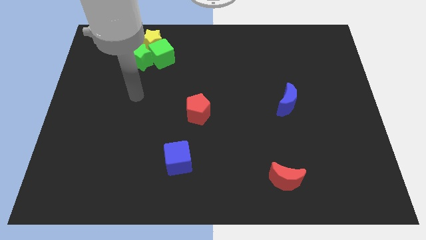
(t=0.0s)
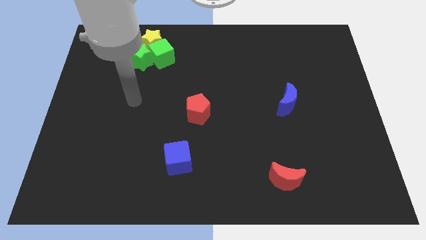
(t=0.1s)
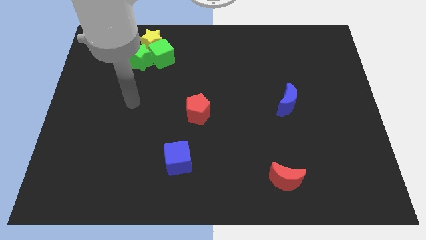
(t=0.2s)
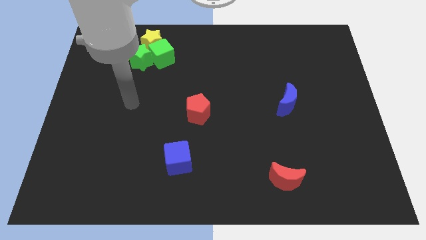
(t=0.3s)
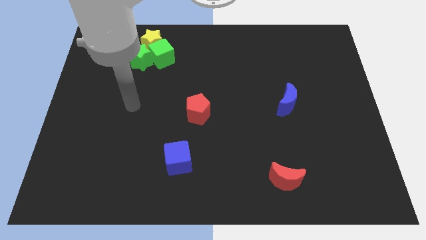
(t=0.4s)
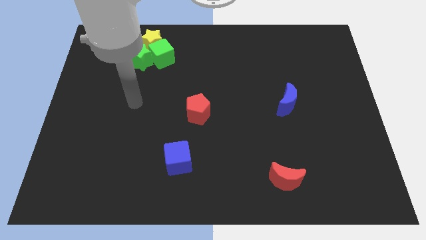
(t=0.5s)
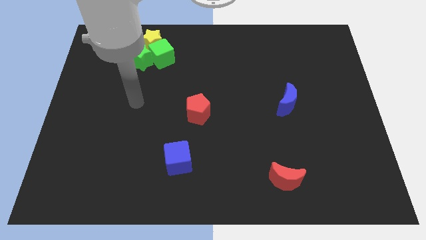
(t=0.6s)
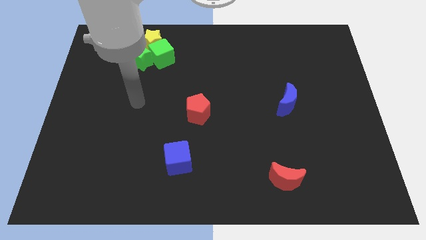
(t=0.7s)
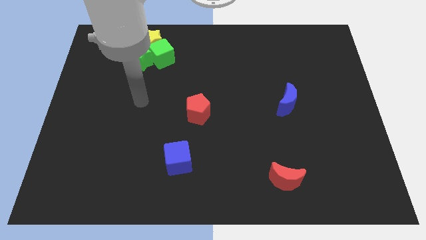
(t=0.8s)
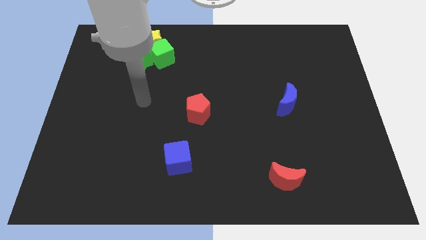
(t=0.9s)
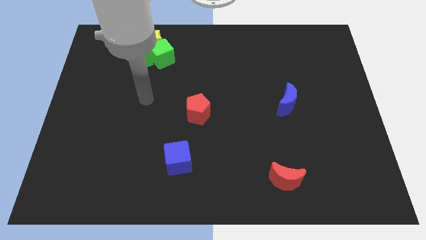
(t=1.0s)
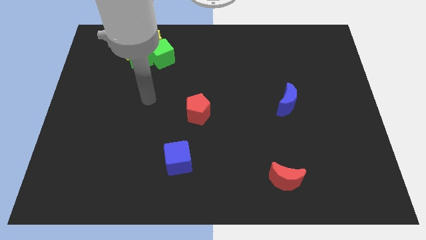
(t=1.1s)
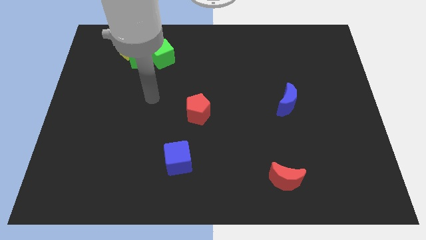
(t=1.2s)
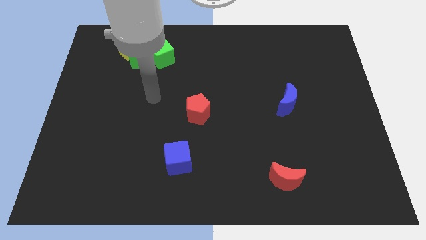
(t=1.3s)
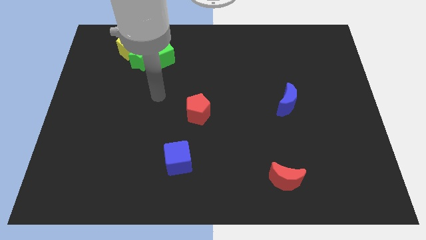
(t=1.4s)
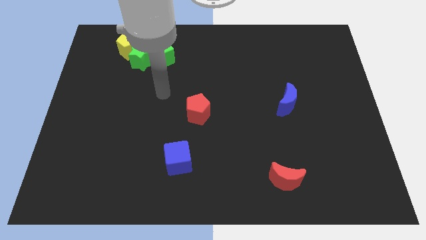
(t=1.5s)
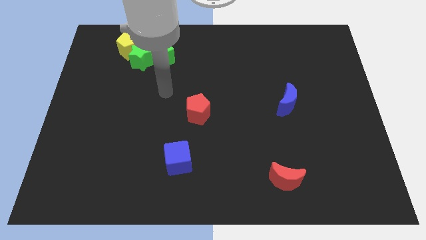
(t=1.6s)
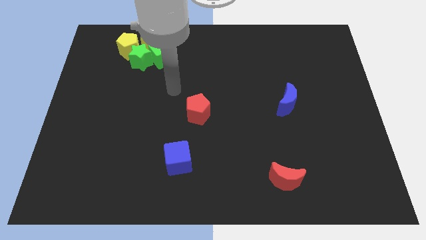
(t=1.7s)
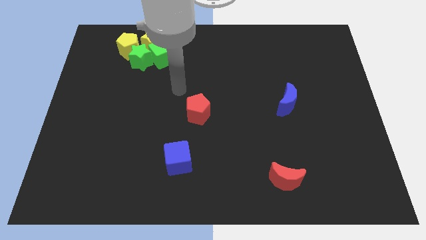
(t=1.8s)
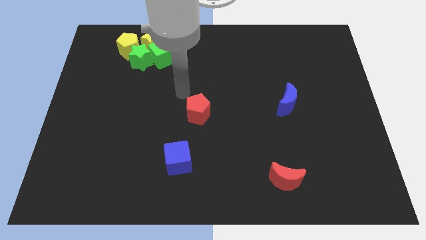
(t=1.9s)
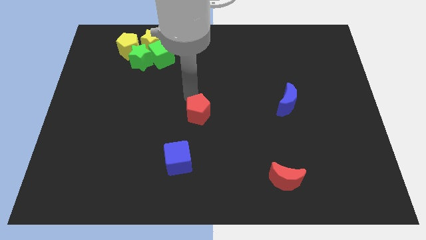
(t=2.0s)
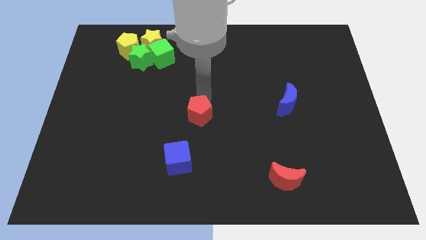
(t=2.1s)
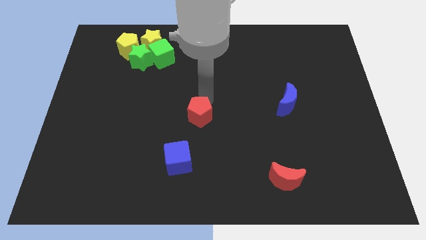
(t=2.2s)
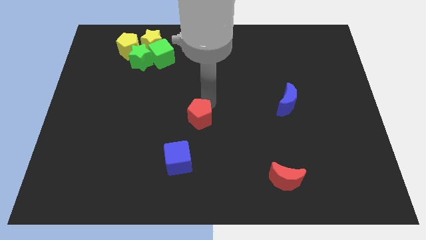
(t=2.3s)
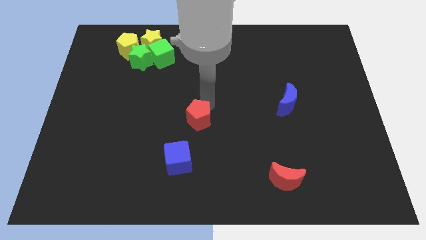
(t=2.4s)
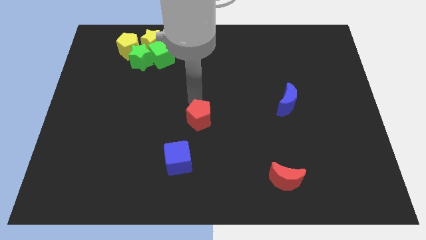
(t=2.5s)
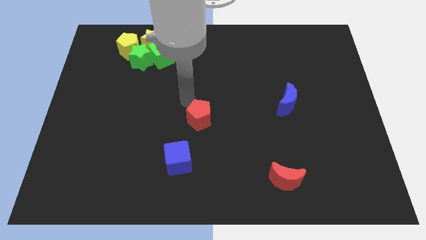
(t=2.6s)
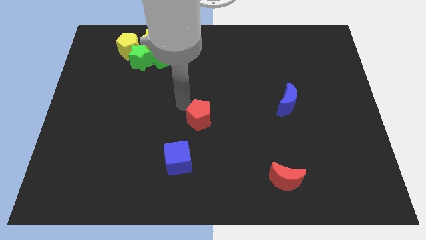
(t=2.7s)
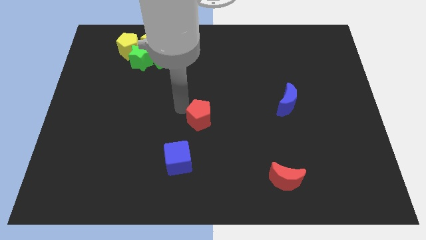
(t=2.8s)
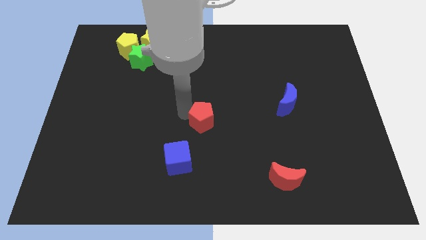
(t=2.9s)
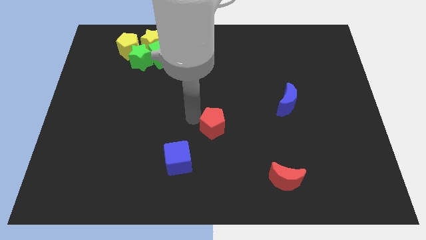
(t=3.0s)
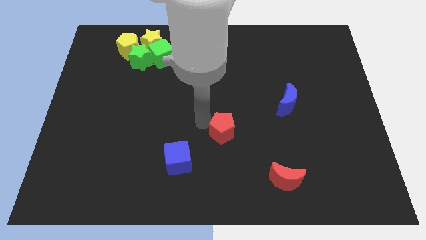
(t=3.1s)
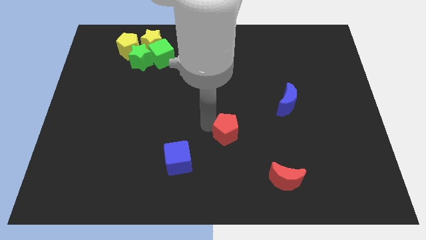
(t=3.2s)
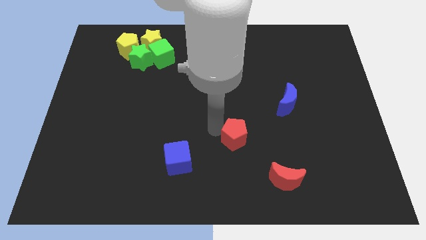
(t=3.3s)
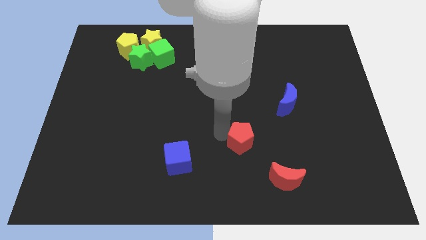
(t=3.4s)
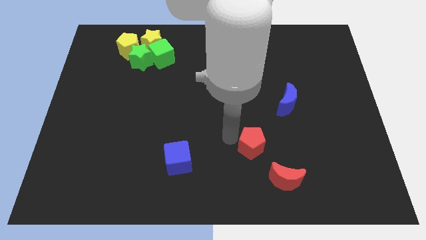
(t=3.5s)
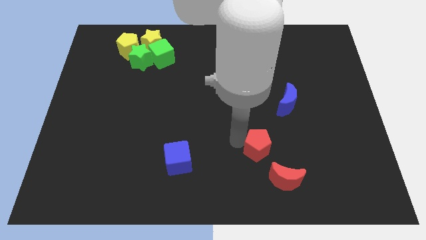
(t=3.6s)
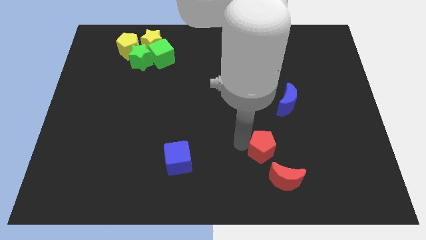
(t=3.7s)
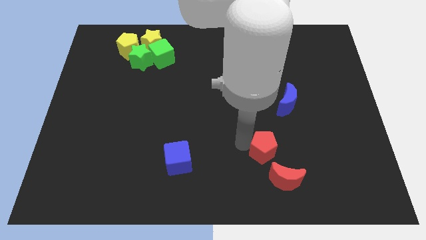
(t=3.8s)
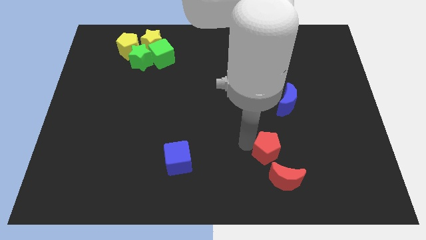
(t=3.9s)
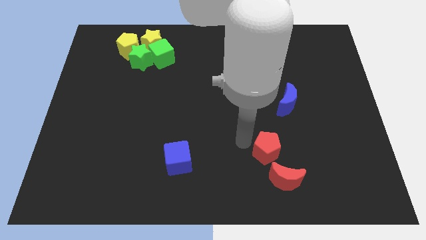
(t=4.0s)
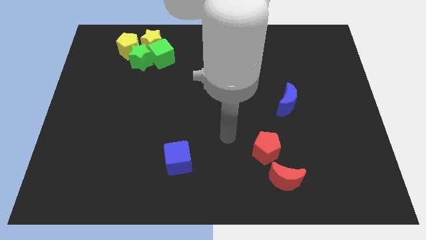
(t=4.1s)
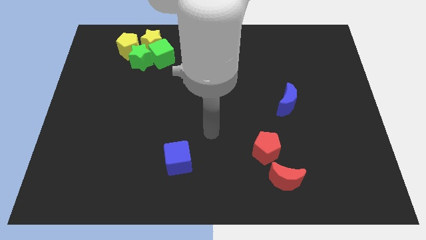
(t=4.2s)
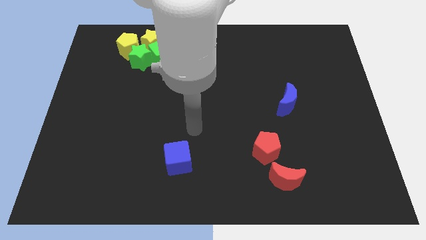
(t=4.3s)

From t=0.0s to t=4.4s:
place the red pentagon above the red crescent

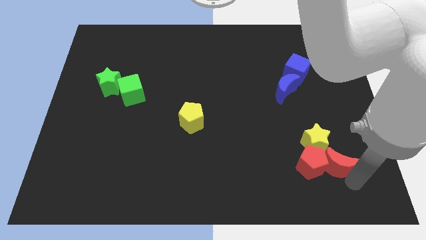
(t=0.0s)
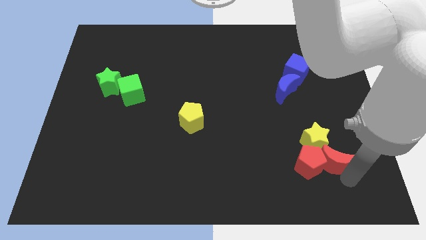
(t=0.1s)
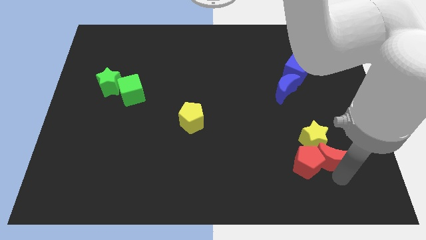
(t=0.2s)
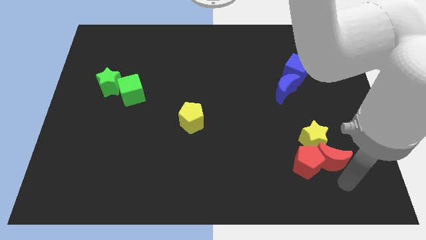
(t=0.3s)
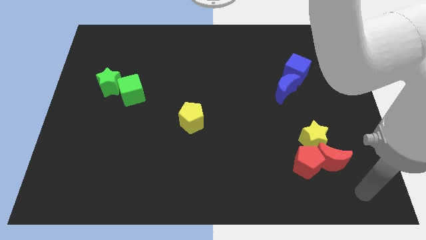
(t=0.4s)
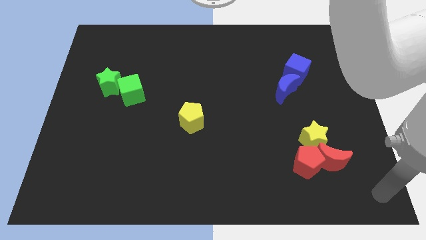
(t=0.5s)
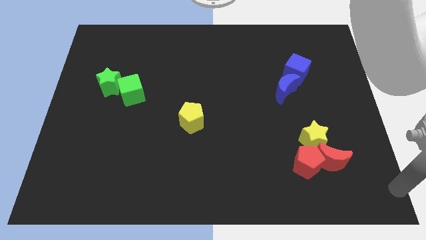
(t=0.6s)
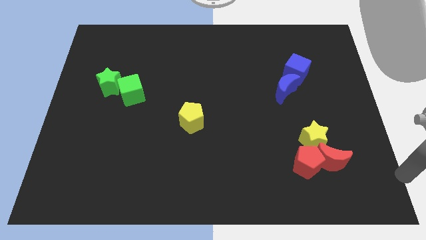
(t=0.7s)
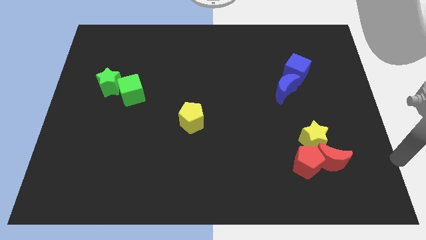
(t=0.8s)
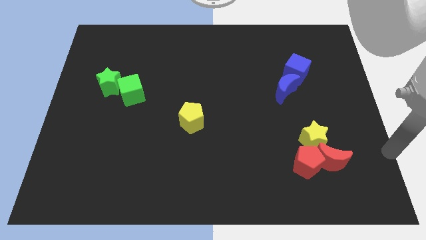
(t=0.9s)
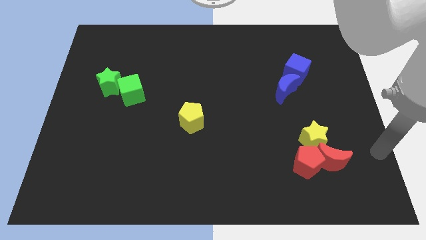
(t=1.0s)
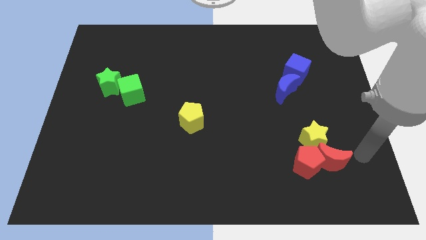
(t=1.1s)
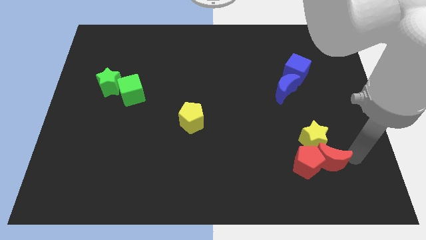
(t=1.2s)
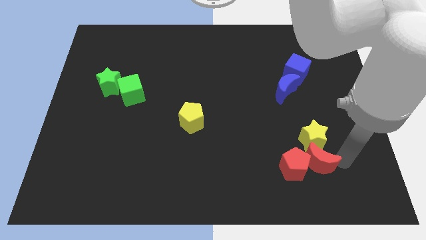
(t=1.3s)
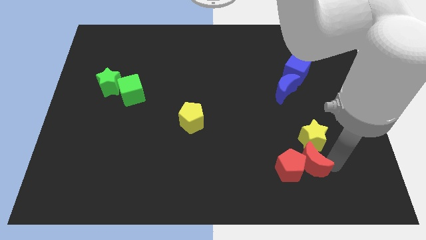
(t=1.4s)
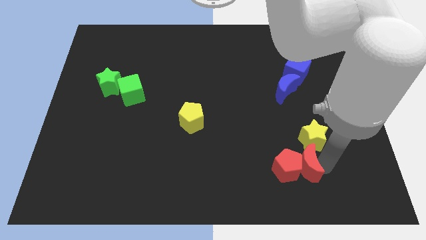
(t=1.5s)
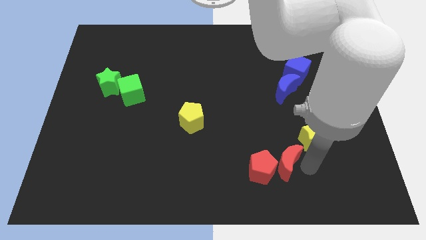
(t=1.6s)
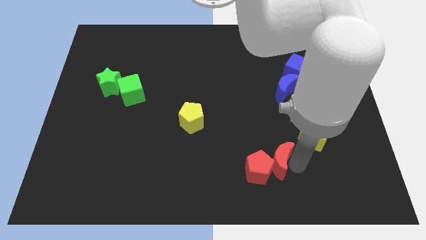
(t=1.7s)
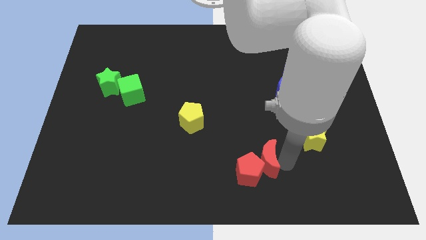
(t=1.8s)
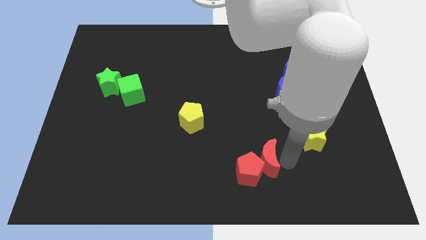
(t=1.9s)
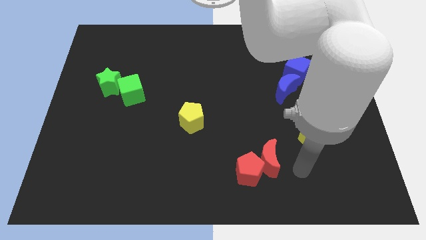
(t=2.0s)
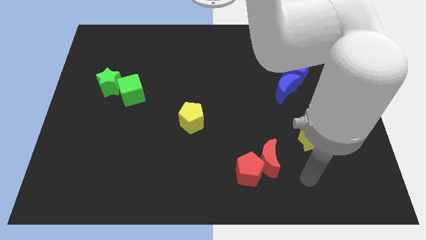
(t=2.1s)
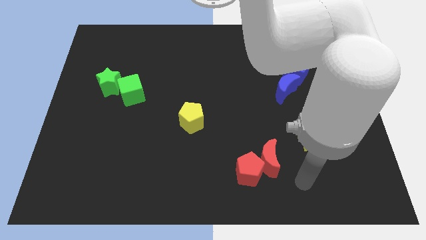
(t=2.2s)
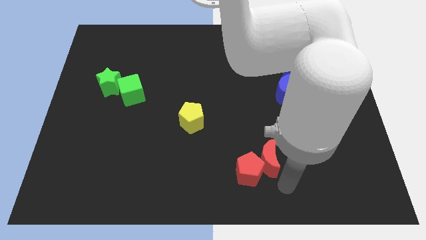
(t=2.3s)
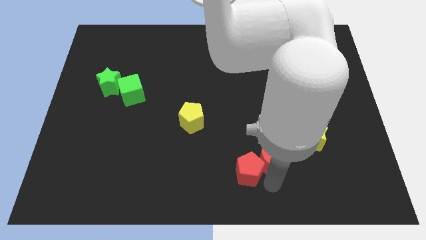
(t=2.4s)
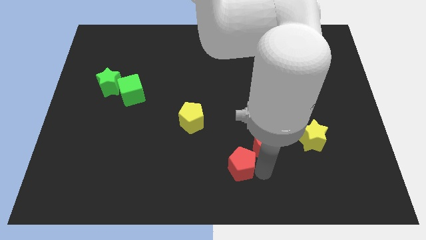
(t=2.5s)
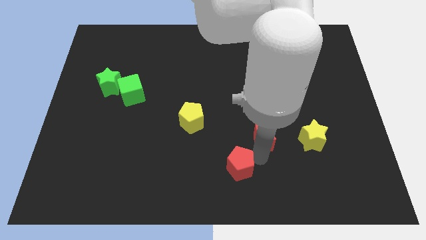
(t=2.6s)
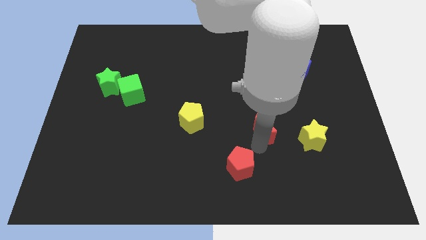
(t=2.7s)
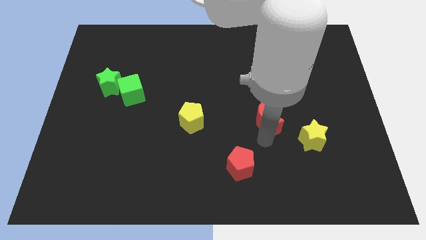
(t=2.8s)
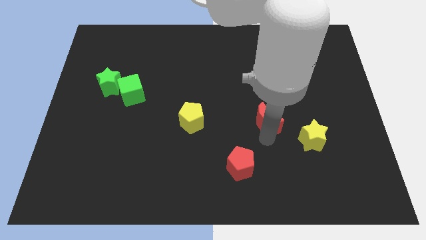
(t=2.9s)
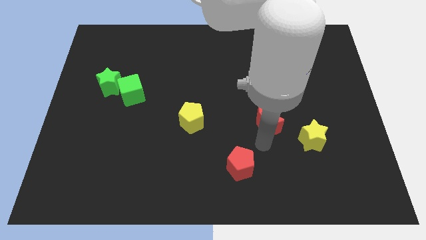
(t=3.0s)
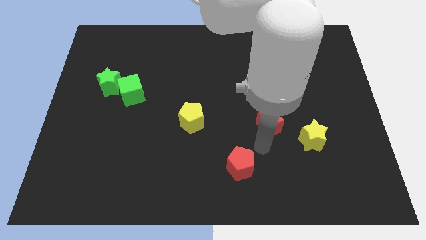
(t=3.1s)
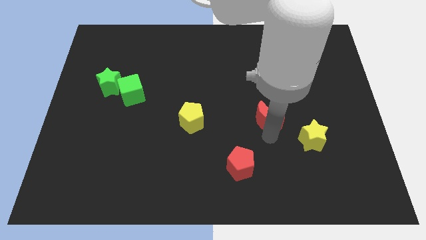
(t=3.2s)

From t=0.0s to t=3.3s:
separate red moon from yellow star

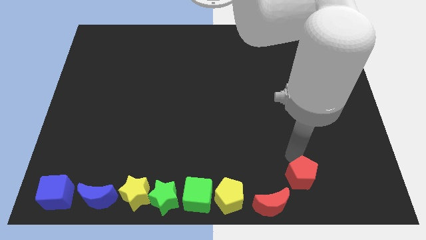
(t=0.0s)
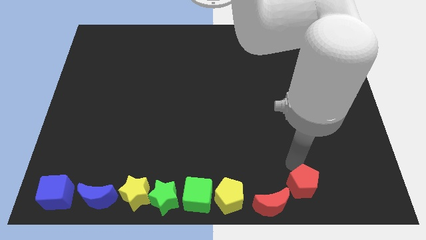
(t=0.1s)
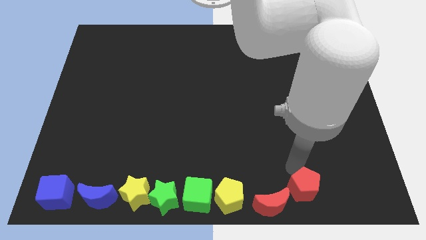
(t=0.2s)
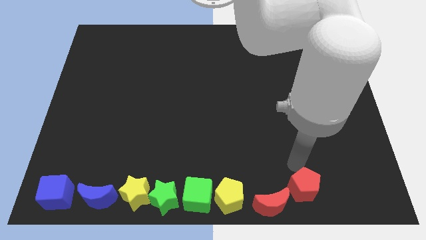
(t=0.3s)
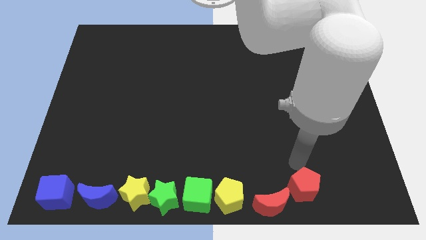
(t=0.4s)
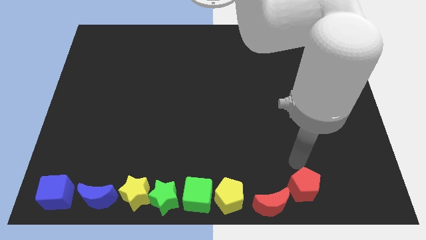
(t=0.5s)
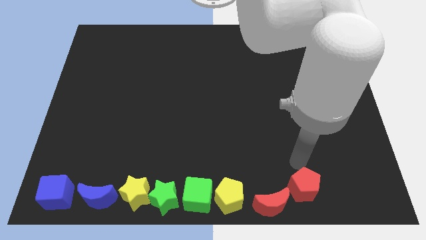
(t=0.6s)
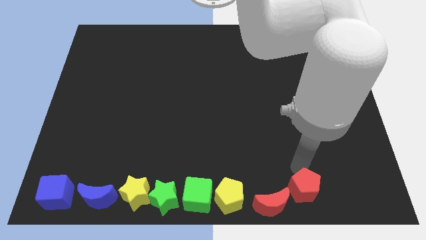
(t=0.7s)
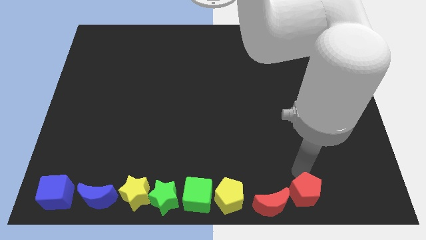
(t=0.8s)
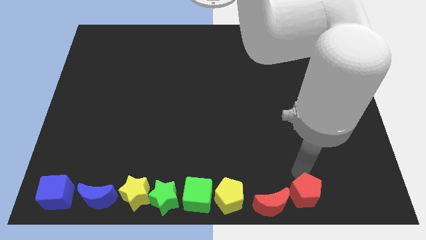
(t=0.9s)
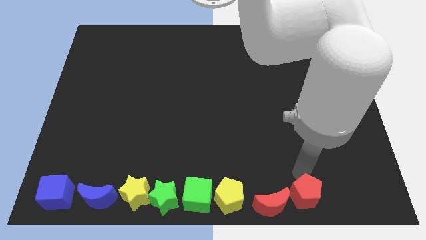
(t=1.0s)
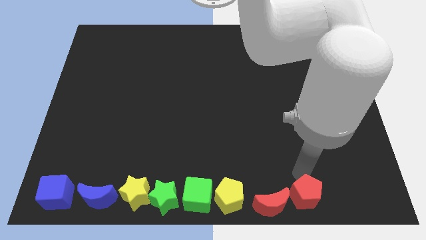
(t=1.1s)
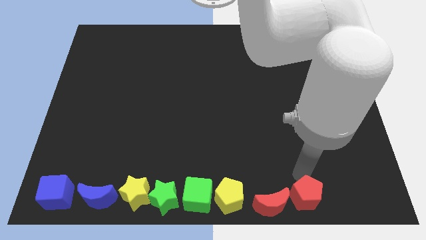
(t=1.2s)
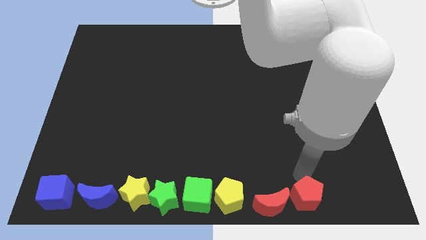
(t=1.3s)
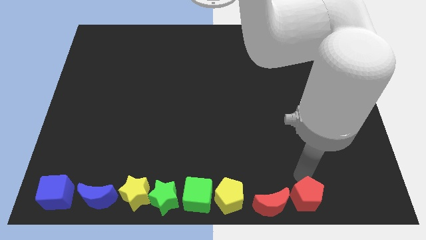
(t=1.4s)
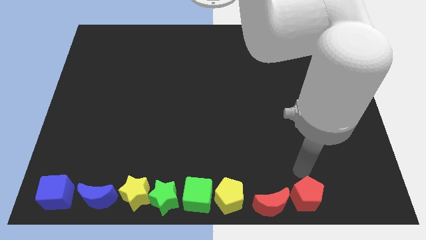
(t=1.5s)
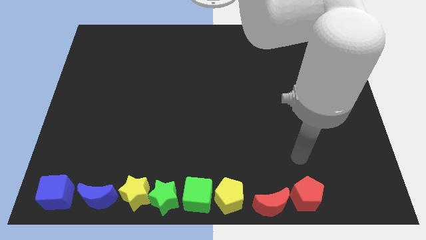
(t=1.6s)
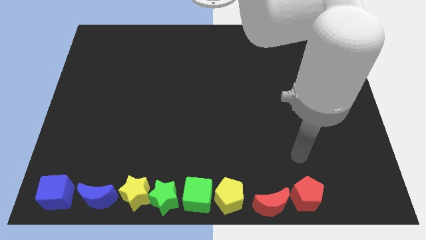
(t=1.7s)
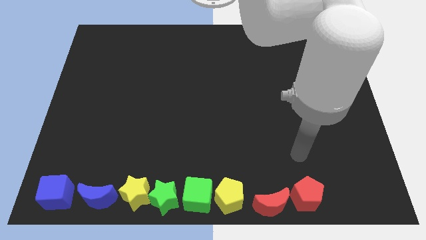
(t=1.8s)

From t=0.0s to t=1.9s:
place red pentagon to the right of the red crescent
